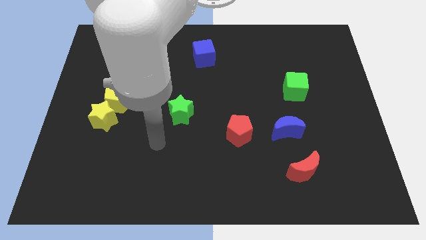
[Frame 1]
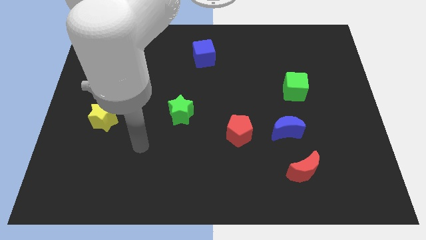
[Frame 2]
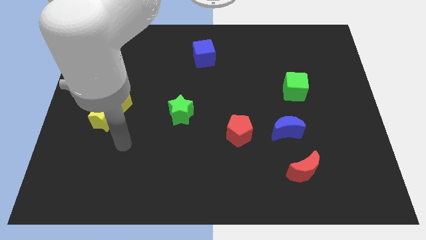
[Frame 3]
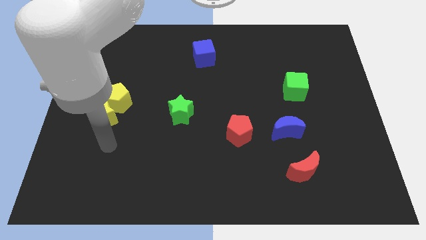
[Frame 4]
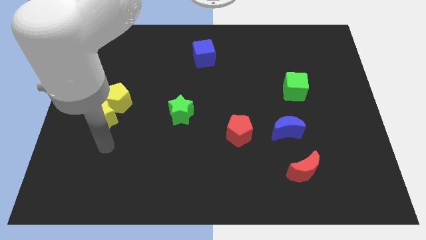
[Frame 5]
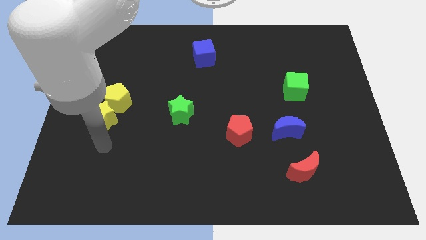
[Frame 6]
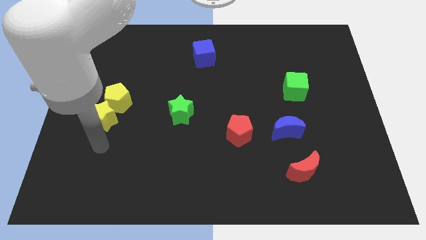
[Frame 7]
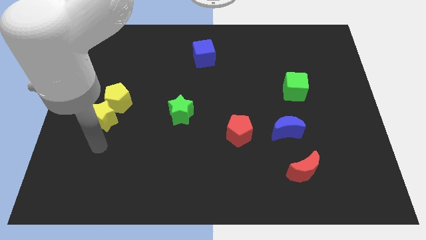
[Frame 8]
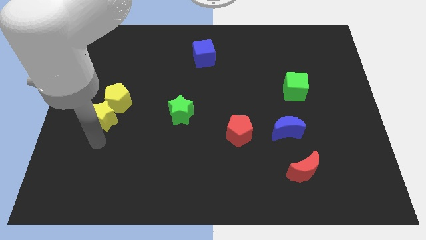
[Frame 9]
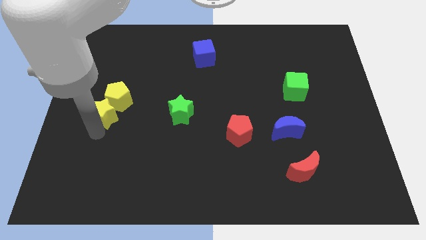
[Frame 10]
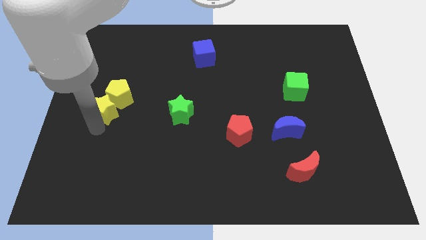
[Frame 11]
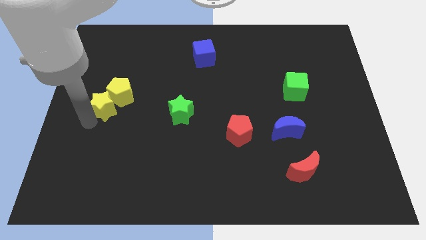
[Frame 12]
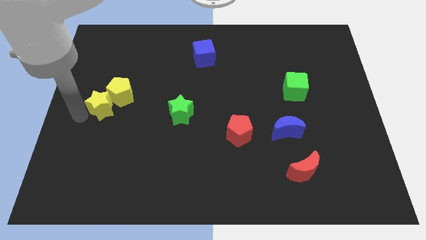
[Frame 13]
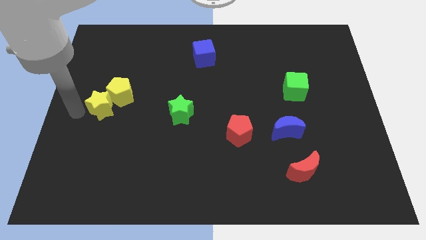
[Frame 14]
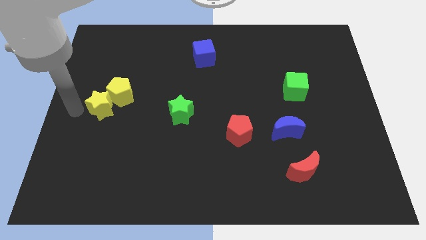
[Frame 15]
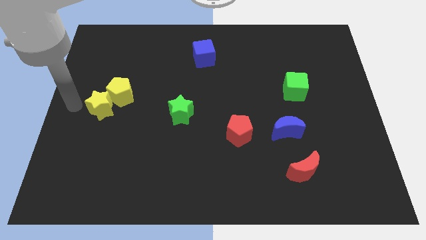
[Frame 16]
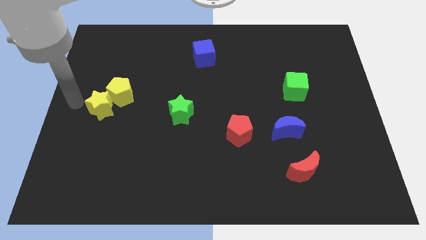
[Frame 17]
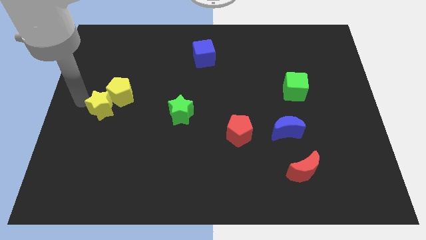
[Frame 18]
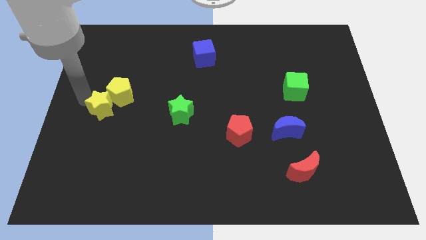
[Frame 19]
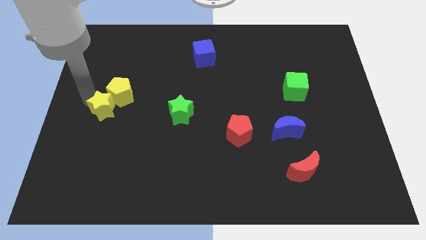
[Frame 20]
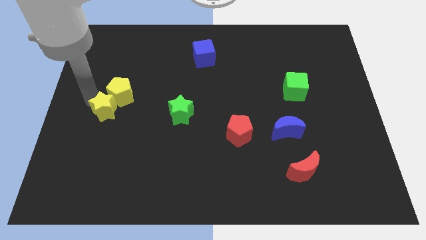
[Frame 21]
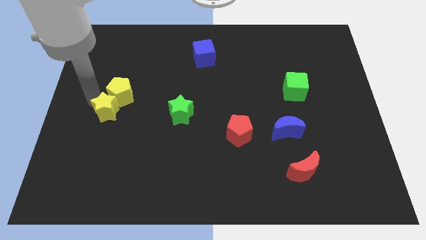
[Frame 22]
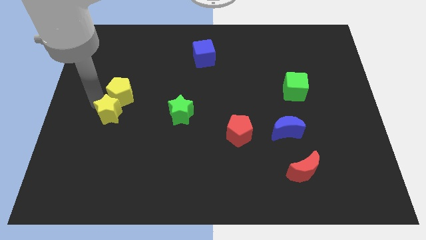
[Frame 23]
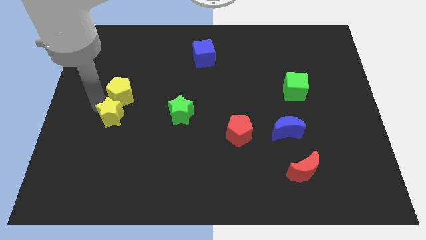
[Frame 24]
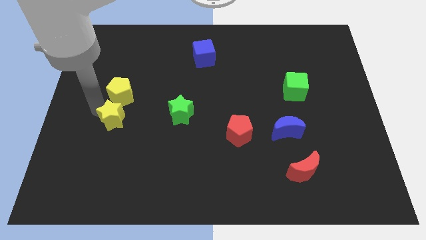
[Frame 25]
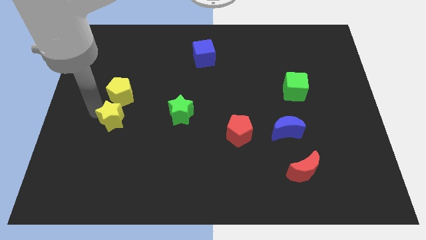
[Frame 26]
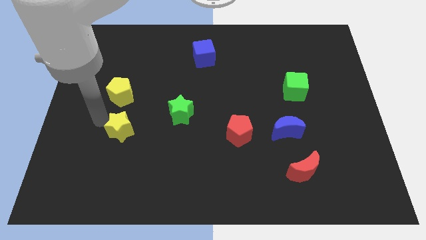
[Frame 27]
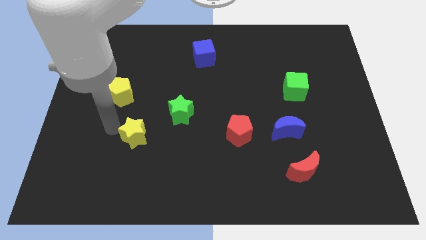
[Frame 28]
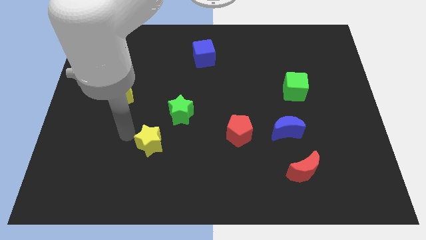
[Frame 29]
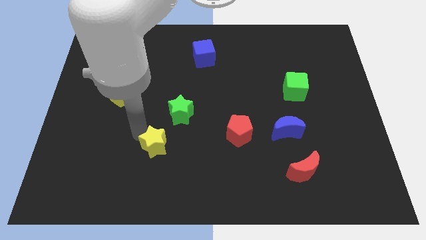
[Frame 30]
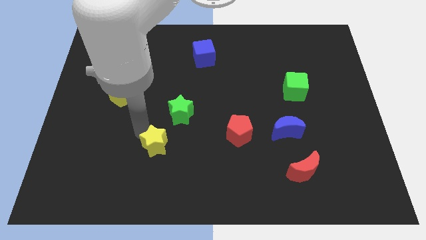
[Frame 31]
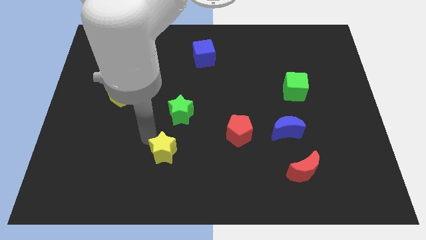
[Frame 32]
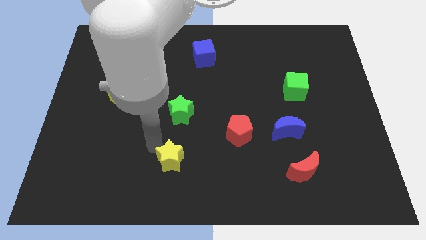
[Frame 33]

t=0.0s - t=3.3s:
separate the yellow star from the yellow pentagon

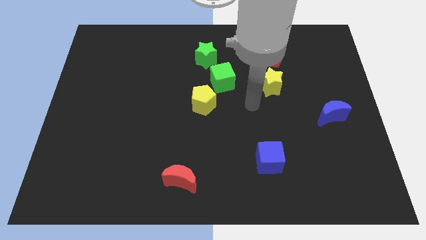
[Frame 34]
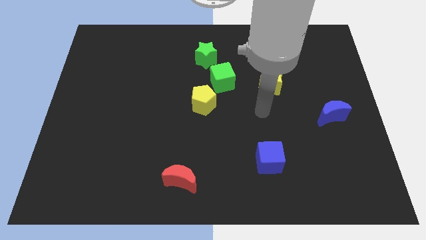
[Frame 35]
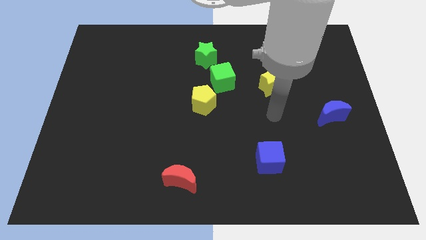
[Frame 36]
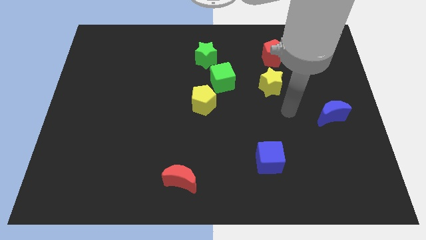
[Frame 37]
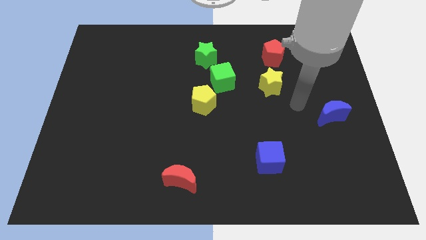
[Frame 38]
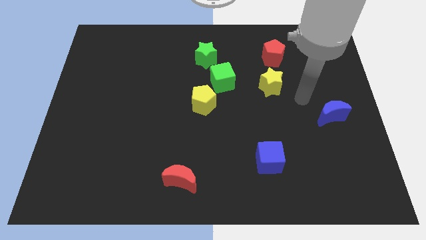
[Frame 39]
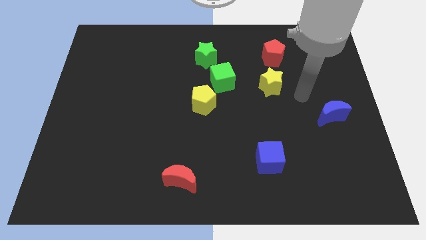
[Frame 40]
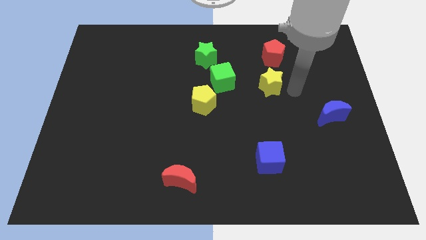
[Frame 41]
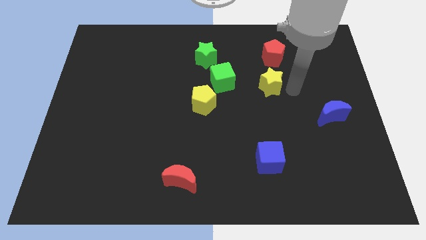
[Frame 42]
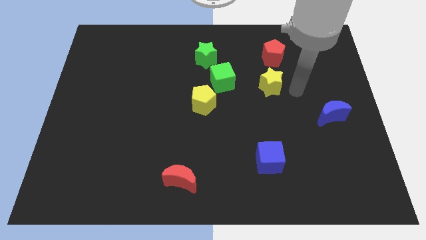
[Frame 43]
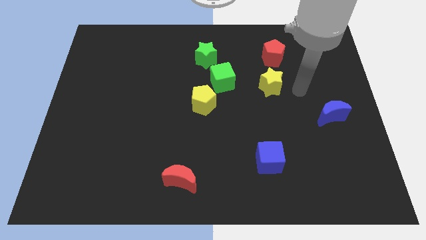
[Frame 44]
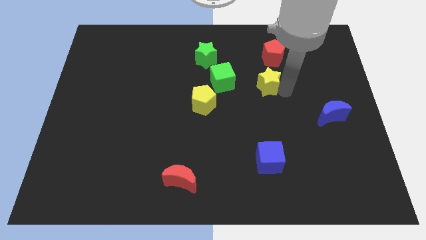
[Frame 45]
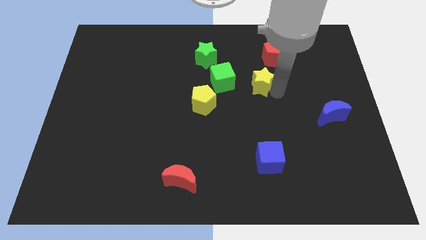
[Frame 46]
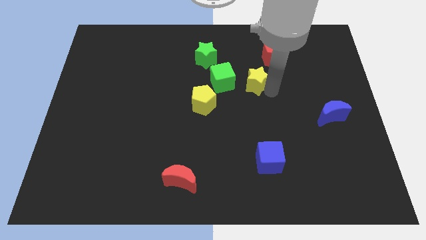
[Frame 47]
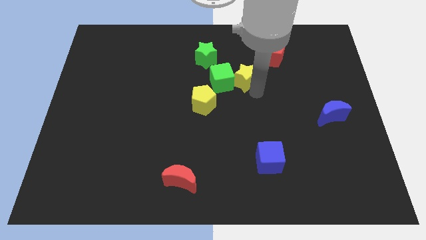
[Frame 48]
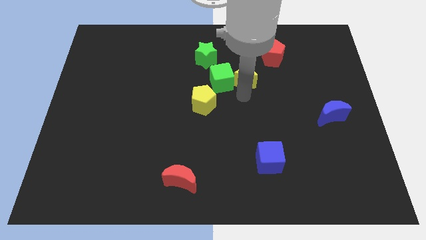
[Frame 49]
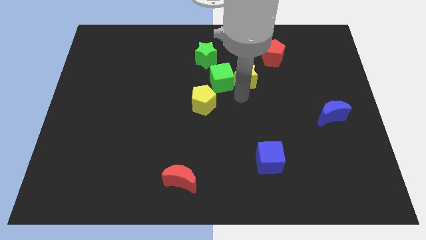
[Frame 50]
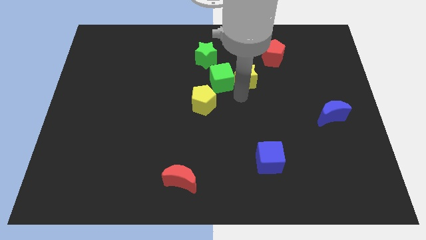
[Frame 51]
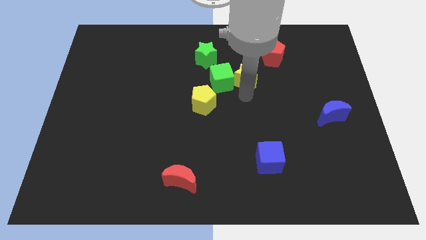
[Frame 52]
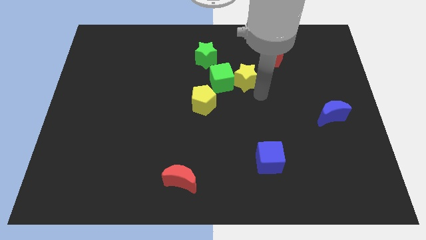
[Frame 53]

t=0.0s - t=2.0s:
push the yellow star into the green cube

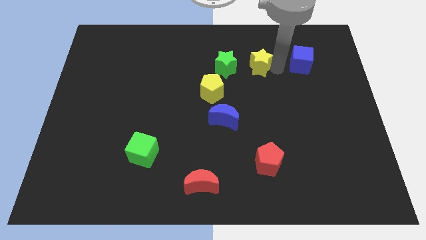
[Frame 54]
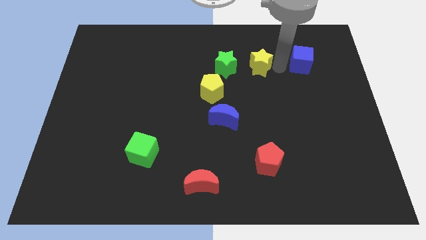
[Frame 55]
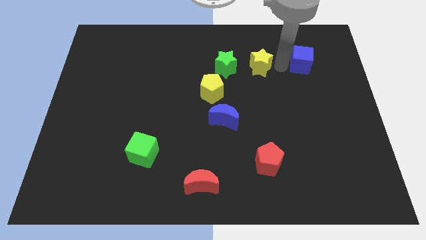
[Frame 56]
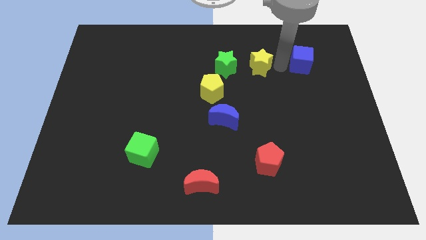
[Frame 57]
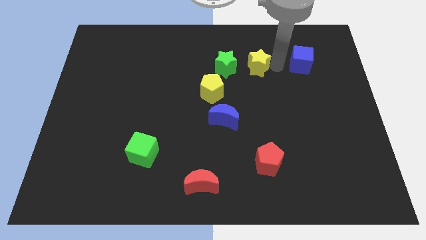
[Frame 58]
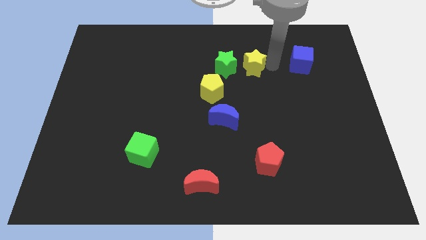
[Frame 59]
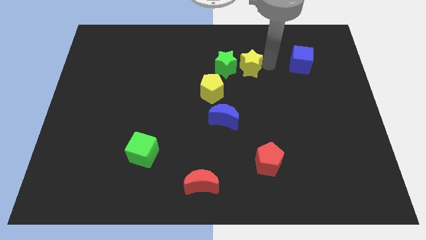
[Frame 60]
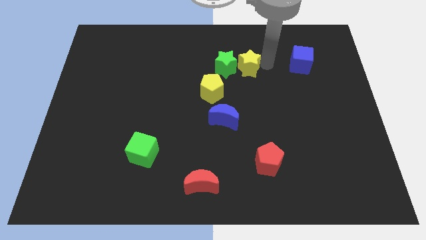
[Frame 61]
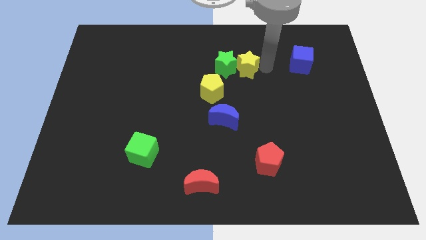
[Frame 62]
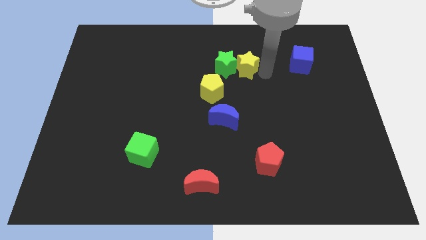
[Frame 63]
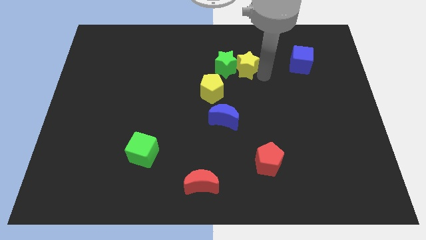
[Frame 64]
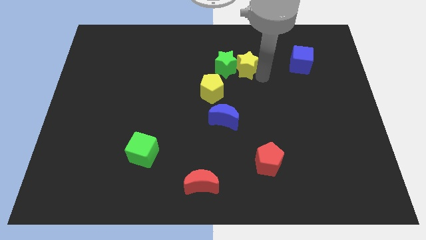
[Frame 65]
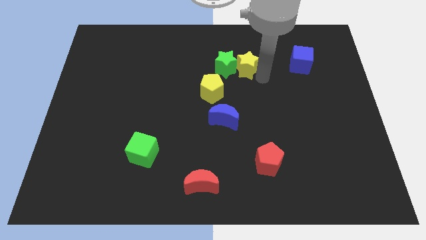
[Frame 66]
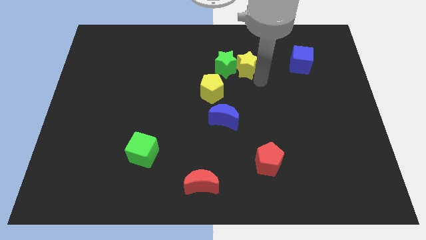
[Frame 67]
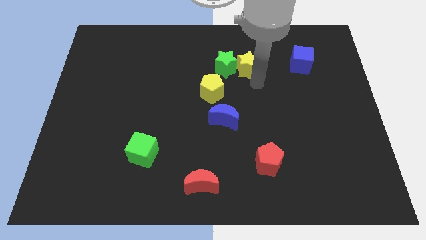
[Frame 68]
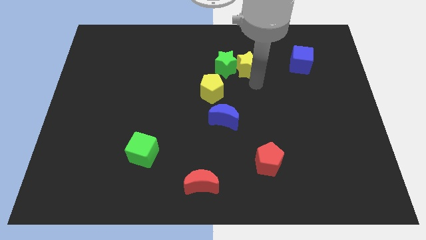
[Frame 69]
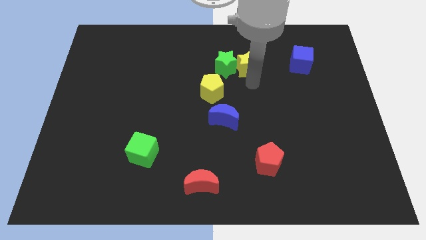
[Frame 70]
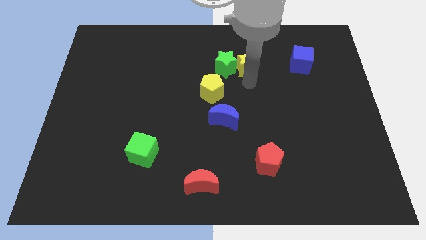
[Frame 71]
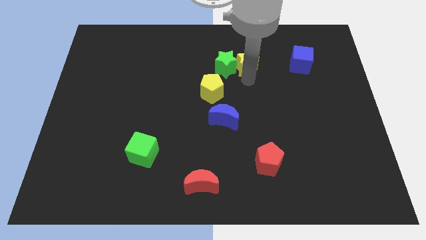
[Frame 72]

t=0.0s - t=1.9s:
place the yellow star to the right side of the green star

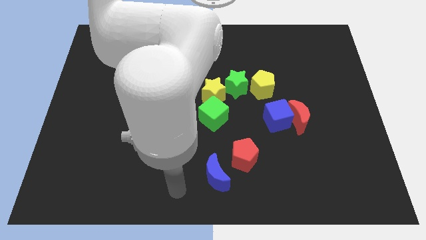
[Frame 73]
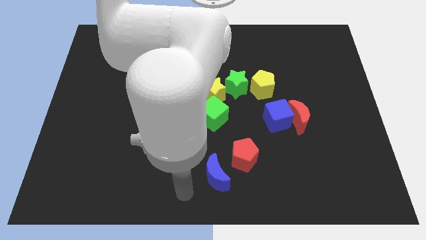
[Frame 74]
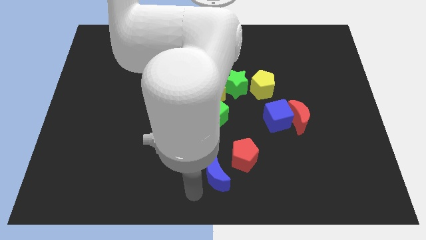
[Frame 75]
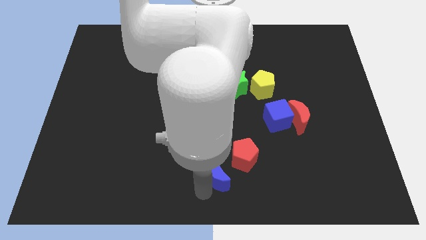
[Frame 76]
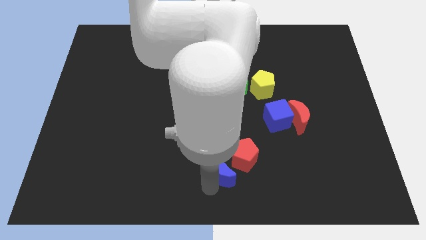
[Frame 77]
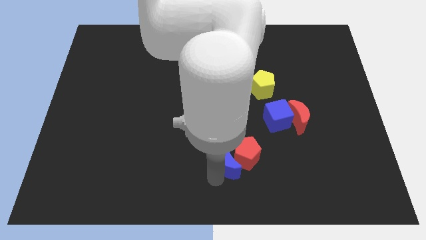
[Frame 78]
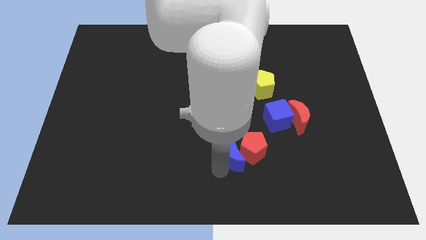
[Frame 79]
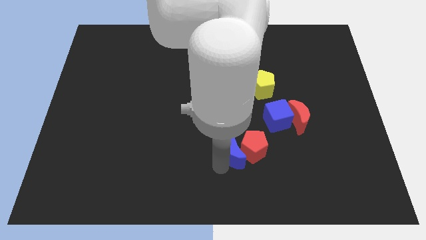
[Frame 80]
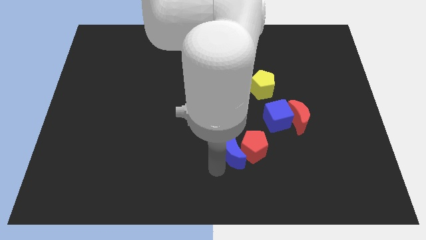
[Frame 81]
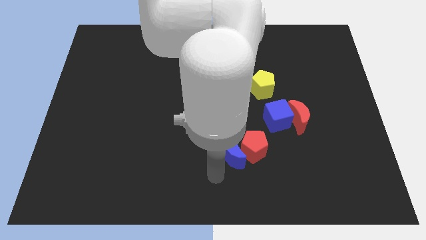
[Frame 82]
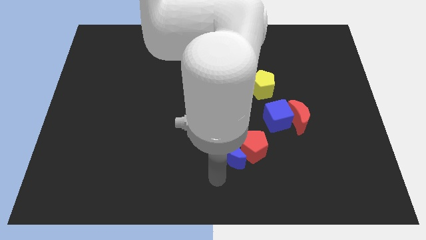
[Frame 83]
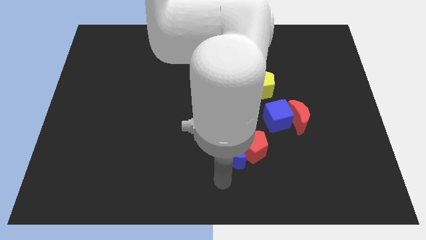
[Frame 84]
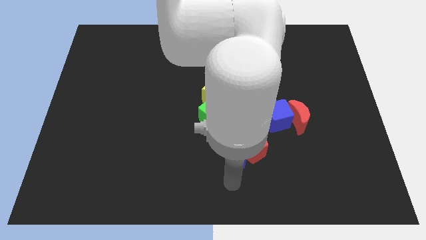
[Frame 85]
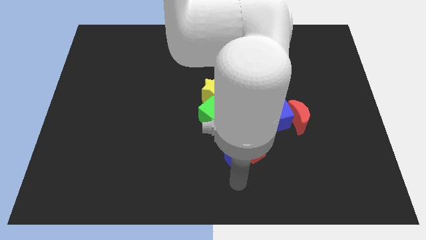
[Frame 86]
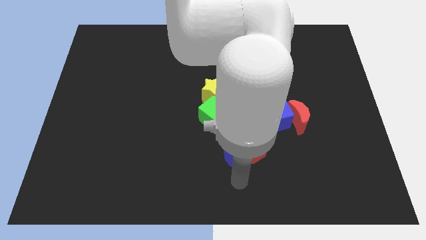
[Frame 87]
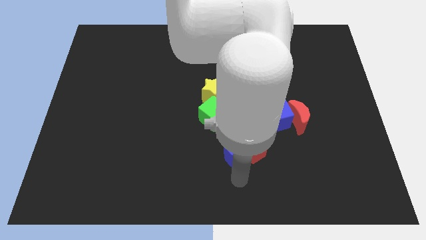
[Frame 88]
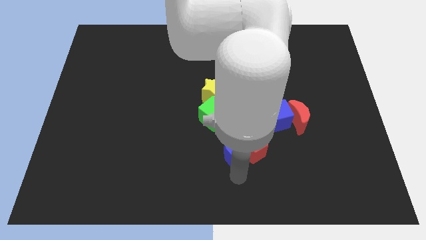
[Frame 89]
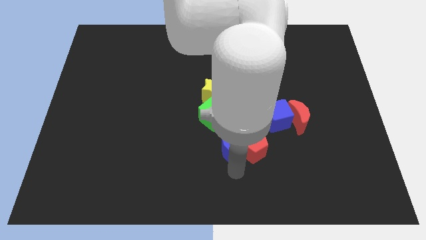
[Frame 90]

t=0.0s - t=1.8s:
push the blue crescent into the red pentagon
